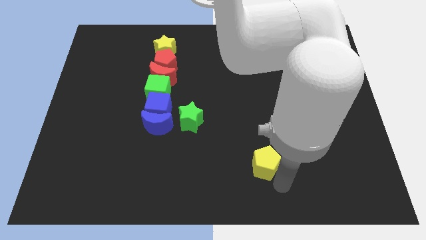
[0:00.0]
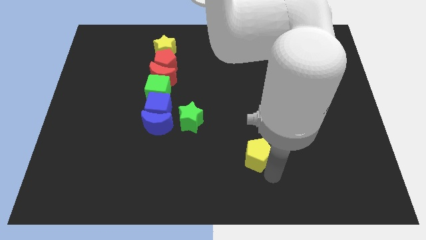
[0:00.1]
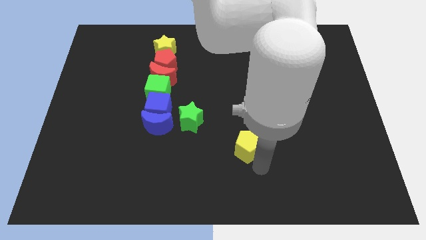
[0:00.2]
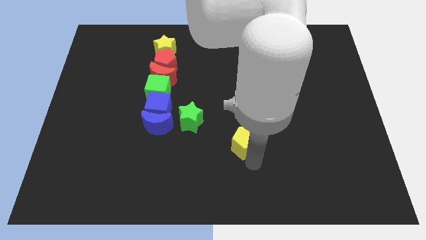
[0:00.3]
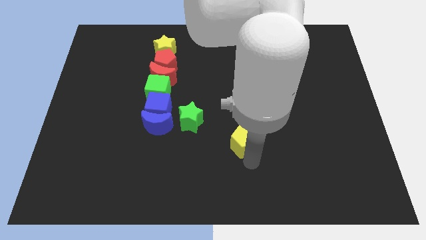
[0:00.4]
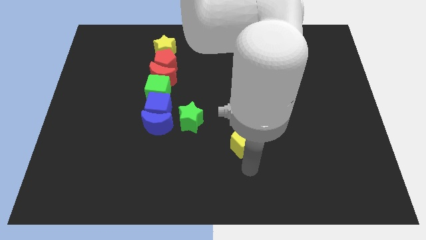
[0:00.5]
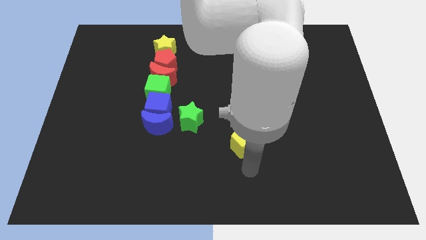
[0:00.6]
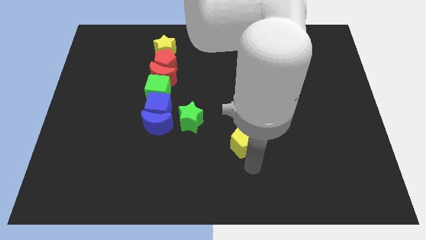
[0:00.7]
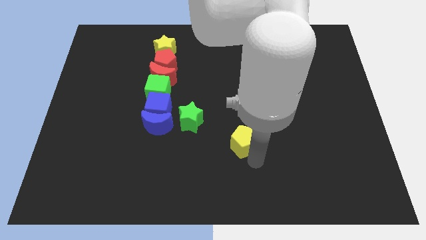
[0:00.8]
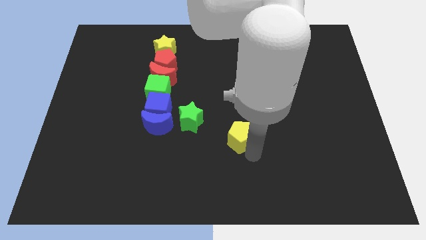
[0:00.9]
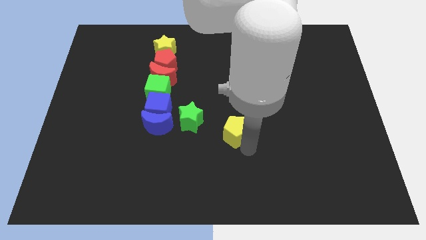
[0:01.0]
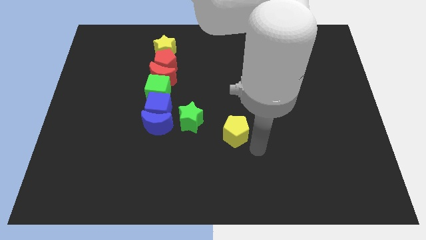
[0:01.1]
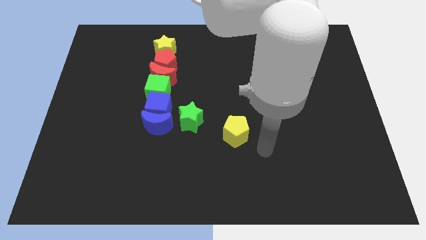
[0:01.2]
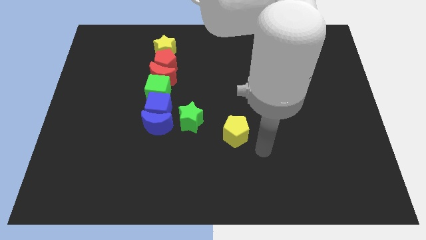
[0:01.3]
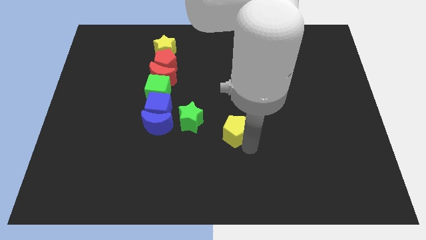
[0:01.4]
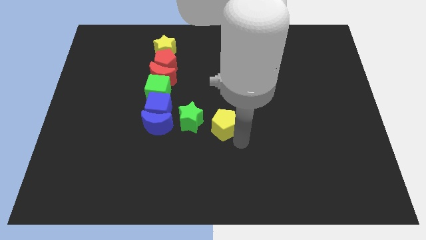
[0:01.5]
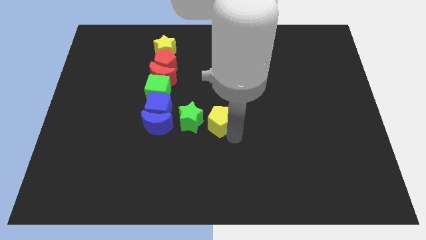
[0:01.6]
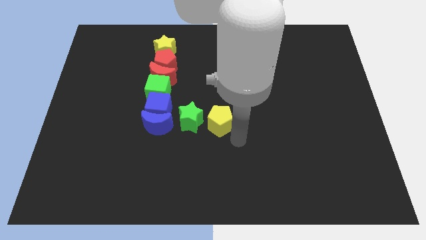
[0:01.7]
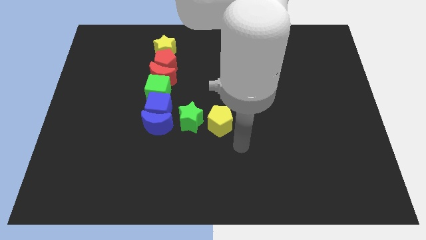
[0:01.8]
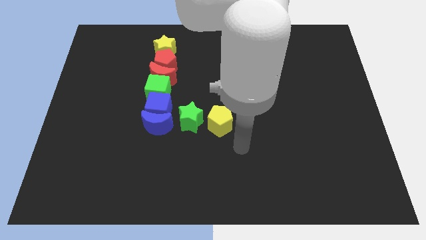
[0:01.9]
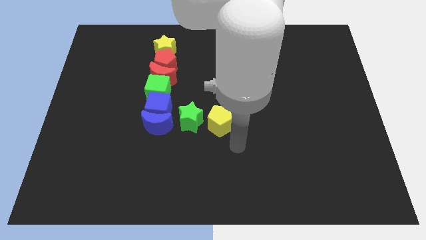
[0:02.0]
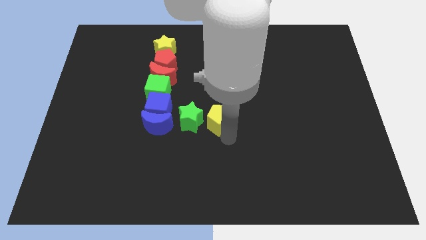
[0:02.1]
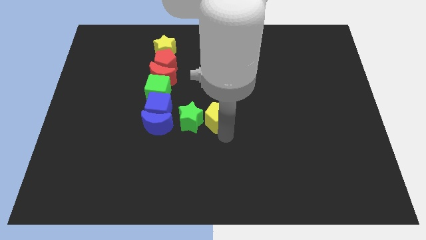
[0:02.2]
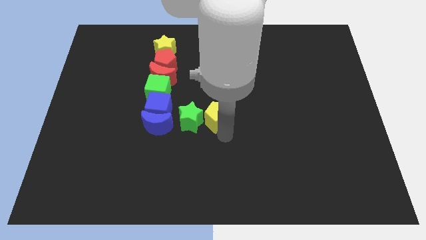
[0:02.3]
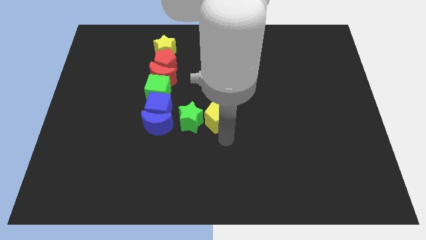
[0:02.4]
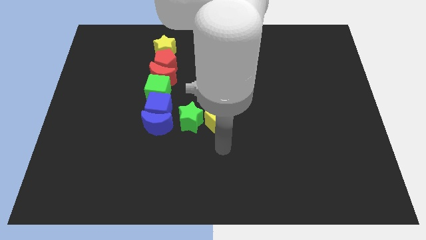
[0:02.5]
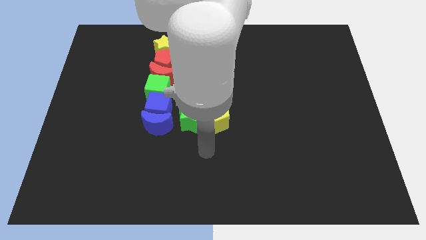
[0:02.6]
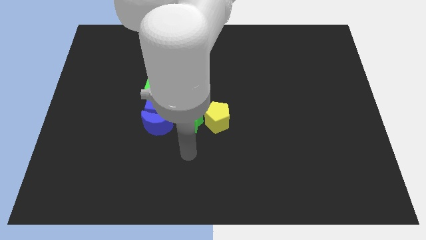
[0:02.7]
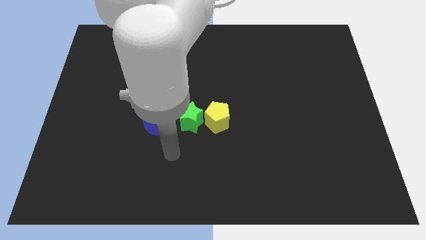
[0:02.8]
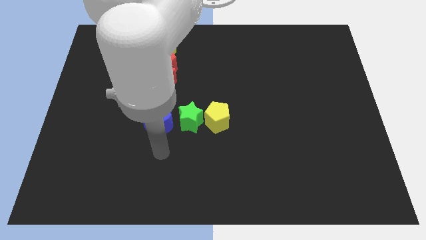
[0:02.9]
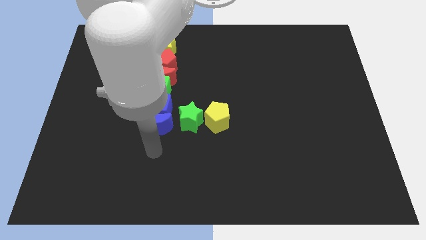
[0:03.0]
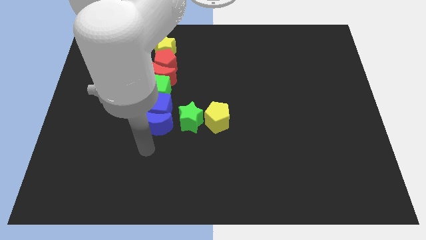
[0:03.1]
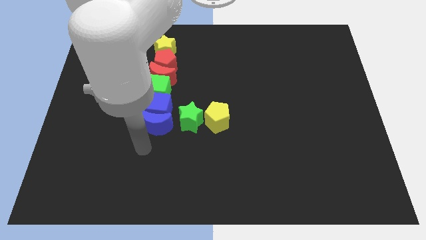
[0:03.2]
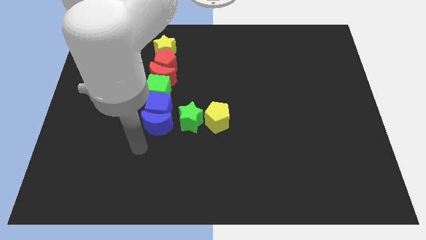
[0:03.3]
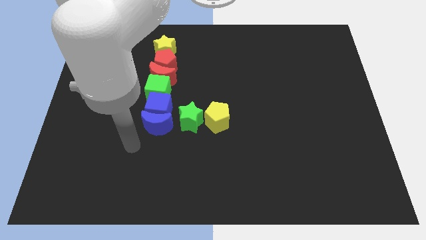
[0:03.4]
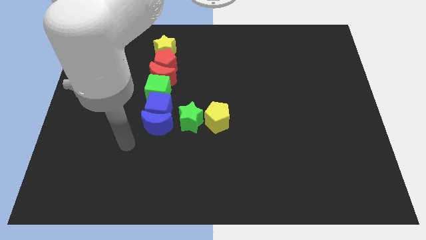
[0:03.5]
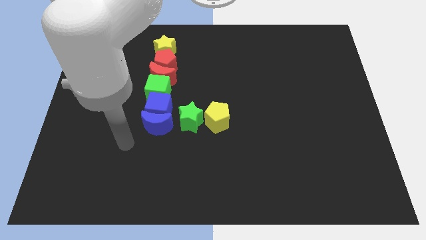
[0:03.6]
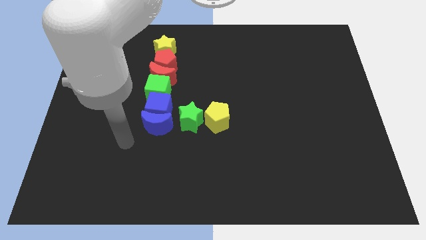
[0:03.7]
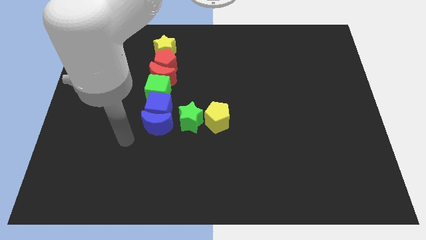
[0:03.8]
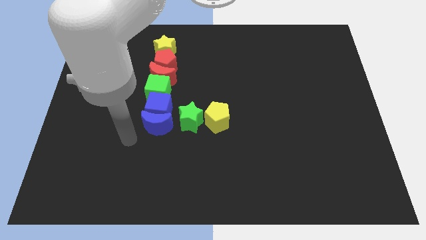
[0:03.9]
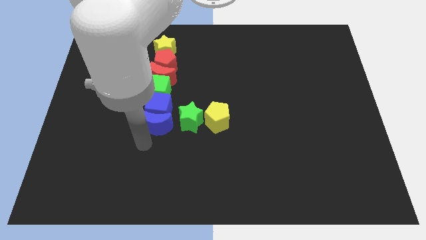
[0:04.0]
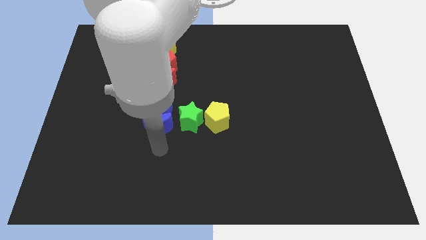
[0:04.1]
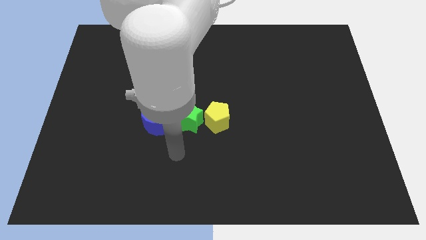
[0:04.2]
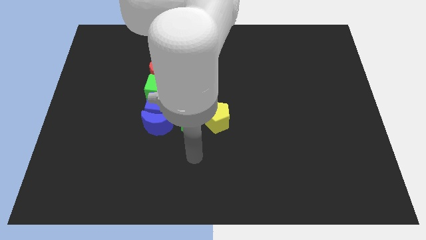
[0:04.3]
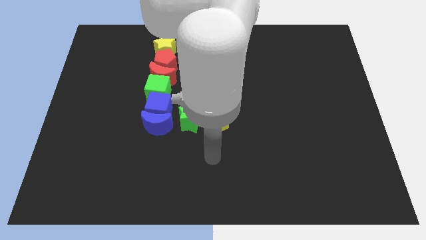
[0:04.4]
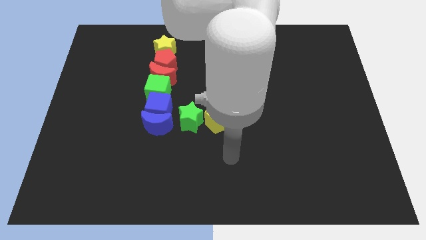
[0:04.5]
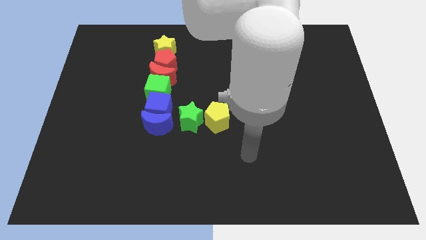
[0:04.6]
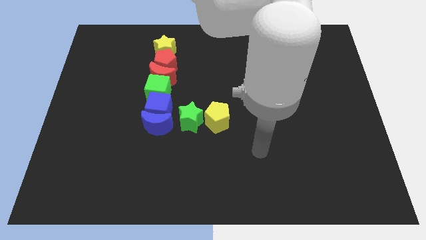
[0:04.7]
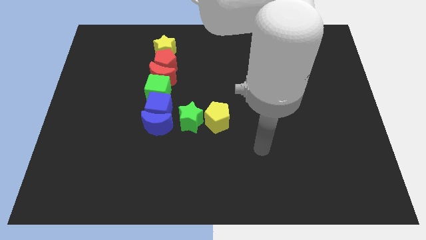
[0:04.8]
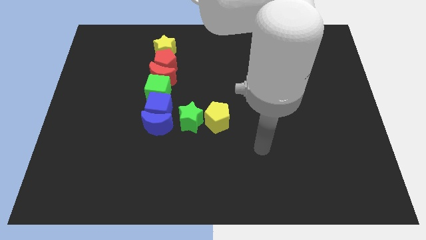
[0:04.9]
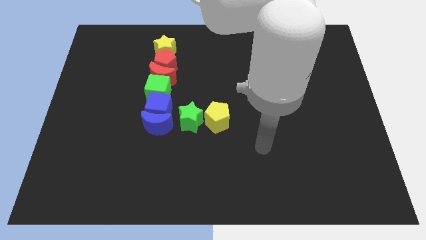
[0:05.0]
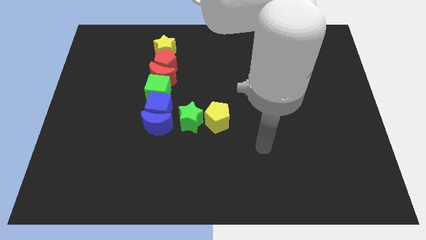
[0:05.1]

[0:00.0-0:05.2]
place the yellow pentagon horizontal to the green star

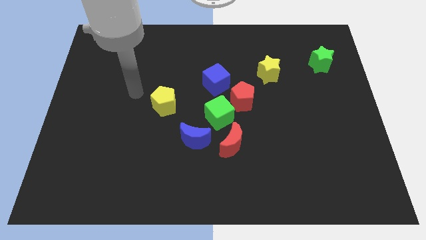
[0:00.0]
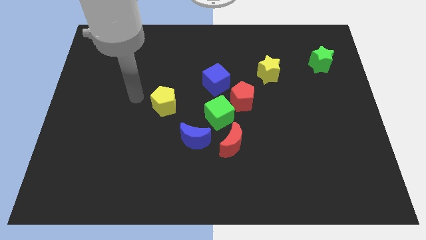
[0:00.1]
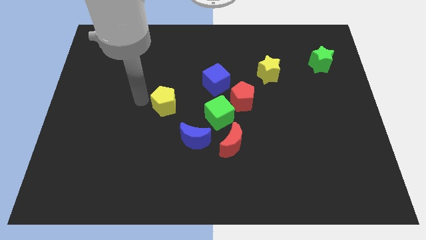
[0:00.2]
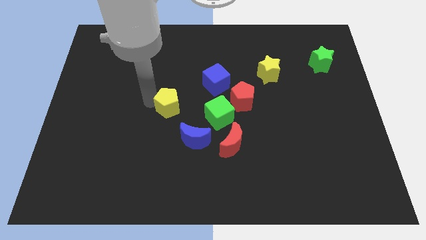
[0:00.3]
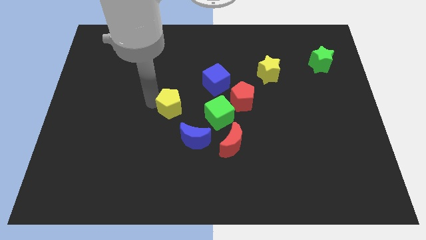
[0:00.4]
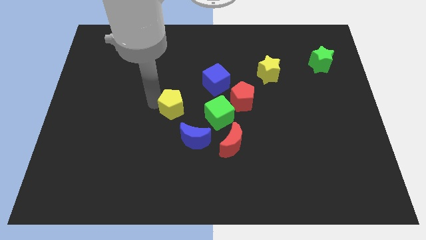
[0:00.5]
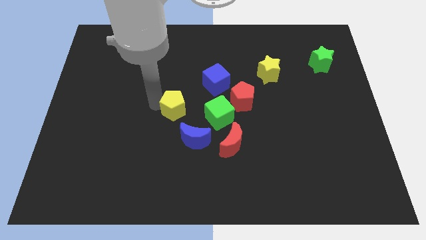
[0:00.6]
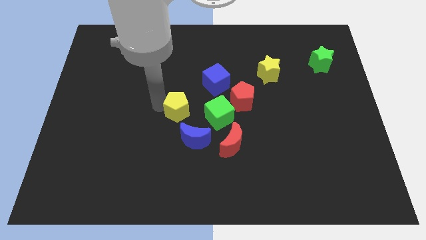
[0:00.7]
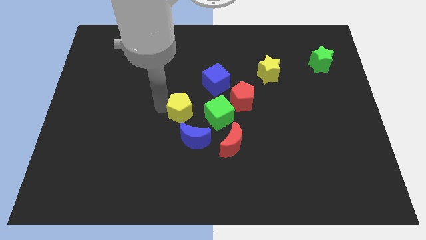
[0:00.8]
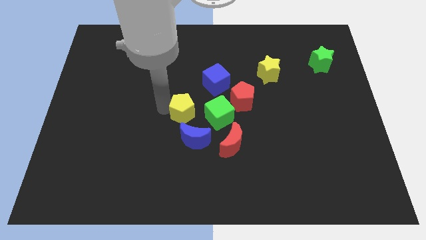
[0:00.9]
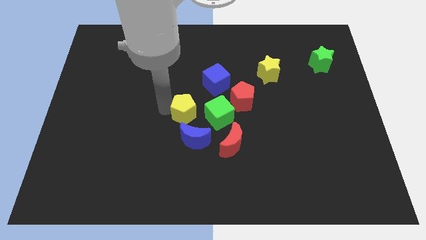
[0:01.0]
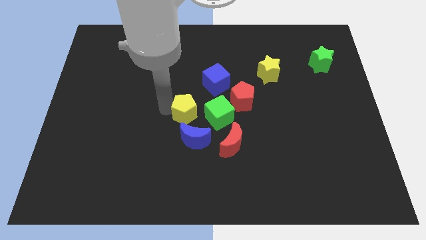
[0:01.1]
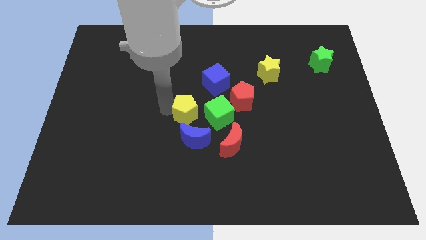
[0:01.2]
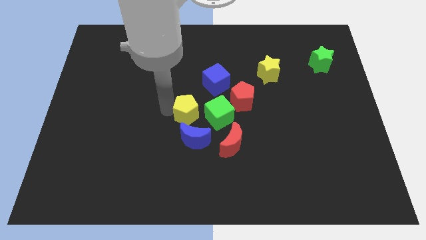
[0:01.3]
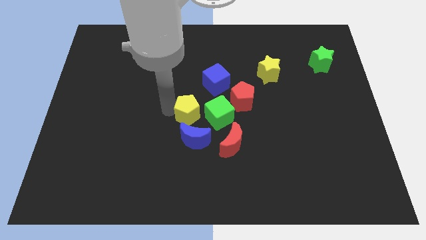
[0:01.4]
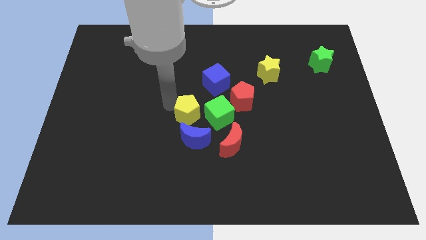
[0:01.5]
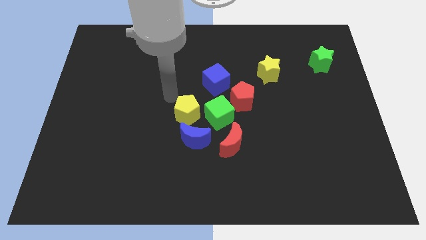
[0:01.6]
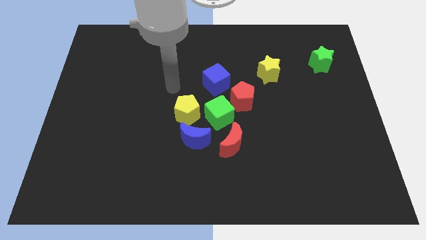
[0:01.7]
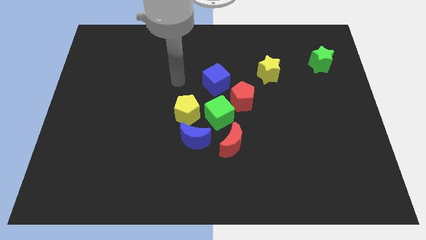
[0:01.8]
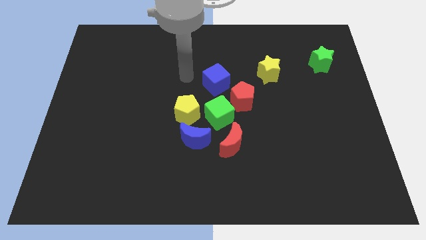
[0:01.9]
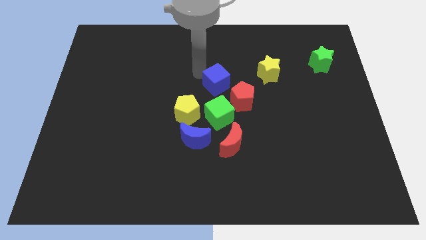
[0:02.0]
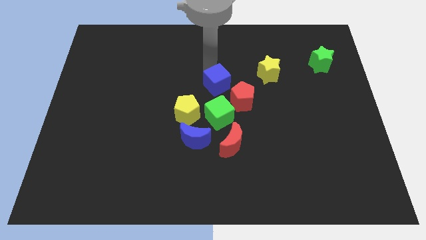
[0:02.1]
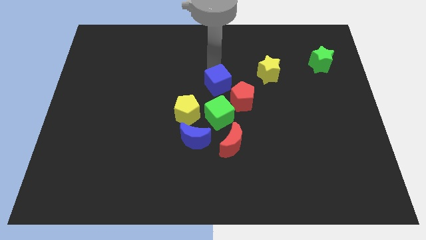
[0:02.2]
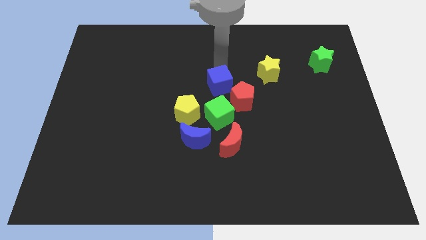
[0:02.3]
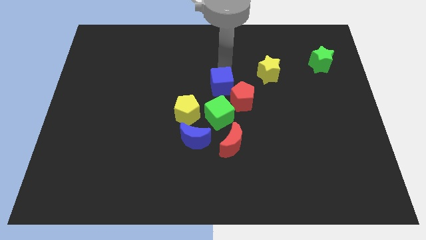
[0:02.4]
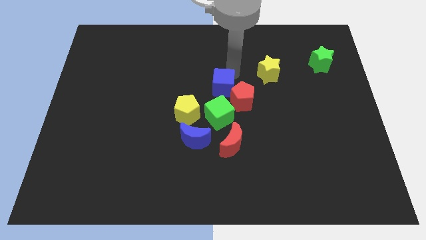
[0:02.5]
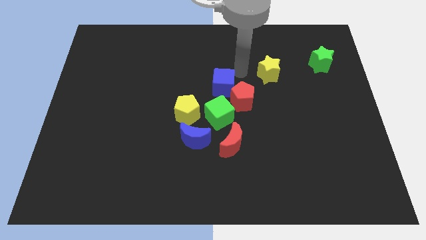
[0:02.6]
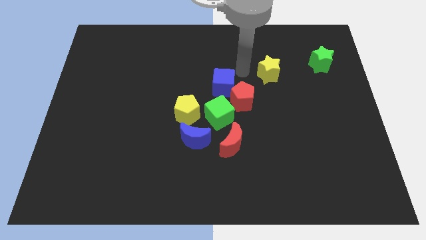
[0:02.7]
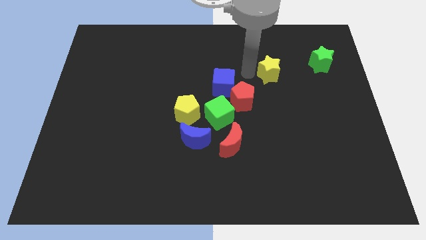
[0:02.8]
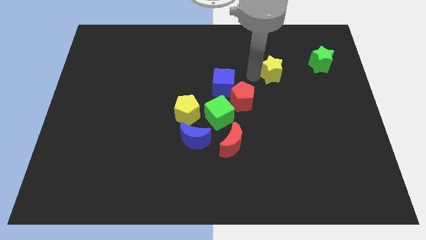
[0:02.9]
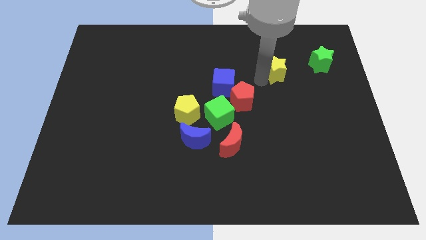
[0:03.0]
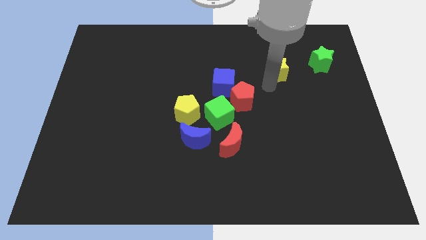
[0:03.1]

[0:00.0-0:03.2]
move your arm towards yellow star

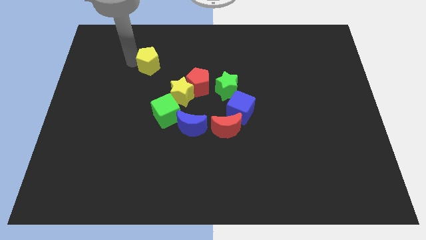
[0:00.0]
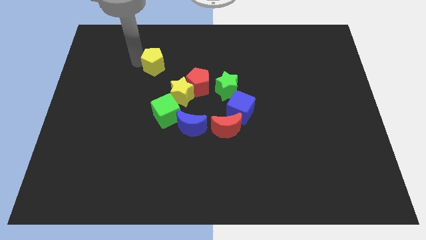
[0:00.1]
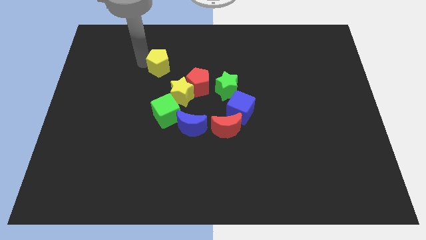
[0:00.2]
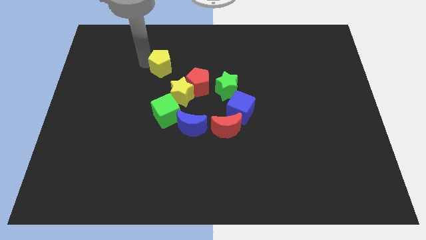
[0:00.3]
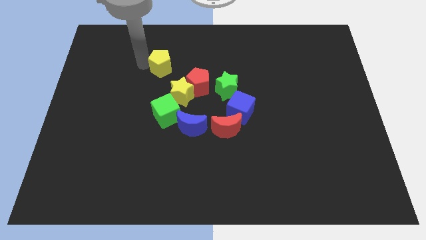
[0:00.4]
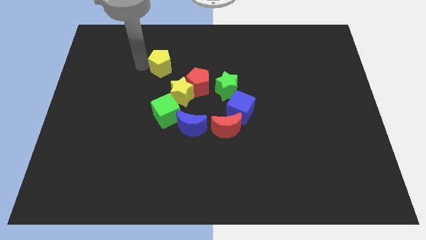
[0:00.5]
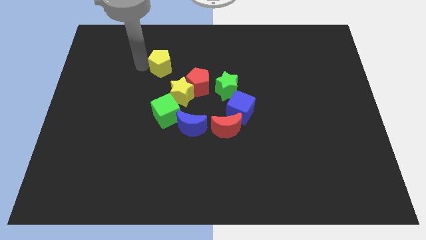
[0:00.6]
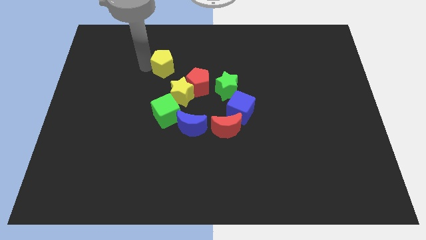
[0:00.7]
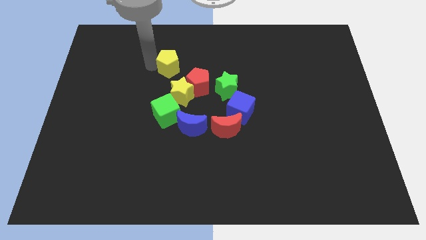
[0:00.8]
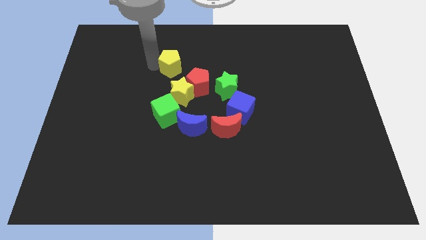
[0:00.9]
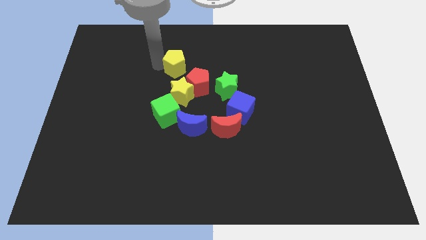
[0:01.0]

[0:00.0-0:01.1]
push yellow pentagon above yellow star
